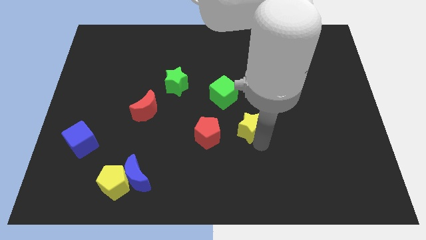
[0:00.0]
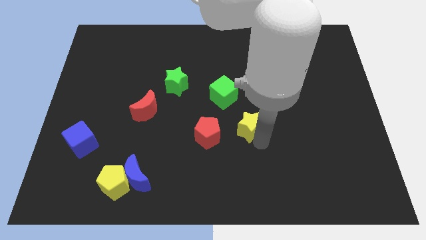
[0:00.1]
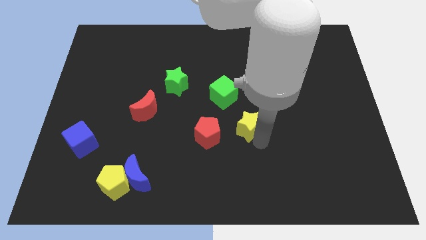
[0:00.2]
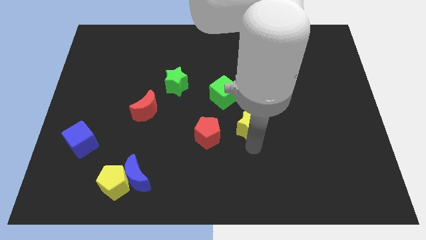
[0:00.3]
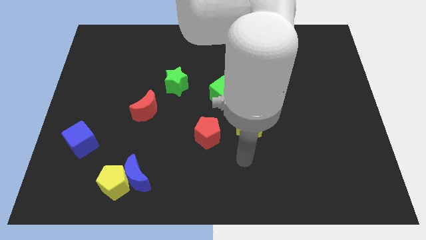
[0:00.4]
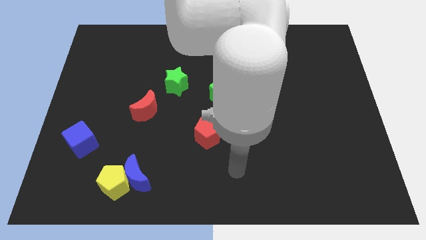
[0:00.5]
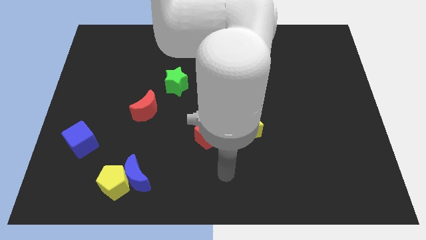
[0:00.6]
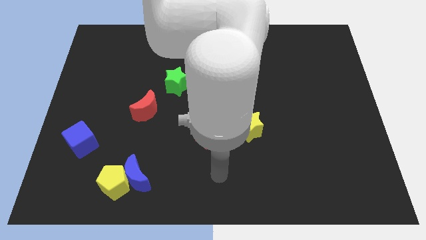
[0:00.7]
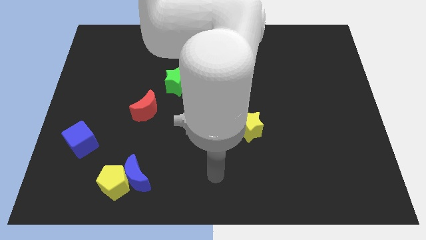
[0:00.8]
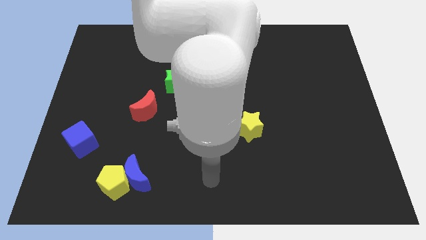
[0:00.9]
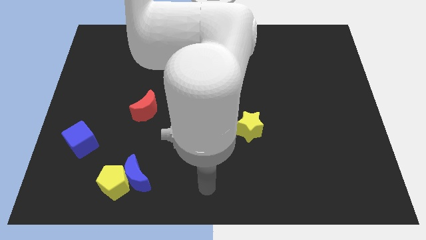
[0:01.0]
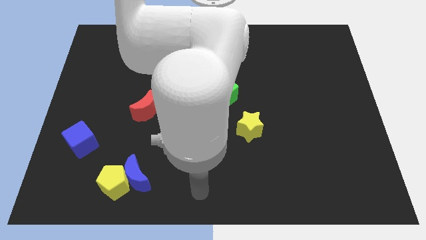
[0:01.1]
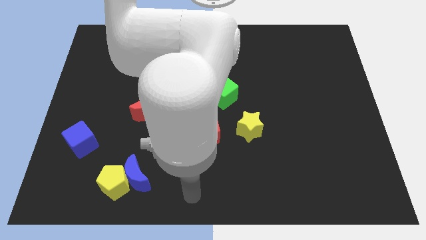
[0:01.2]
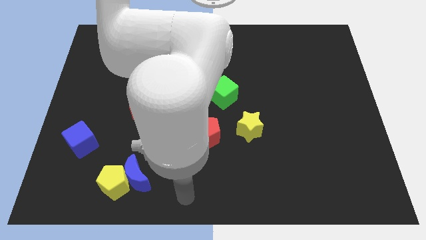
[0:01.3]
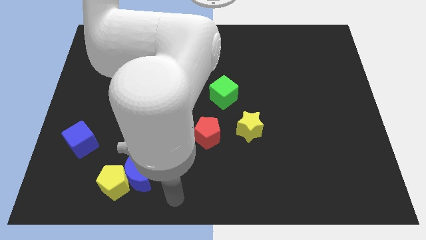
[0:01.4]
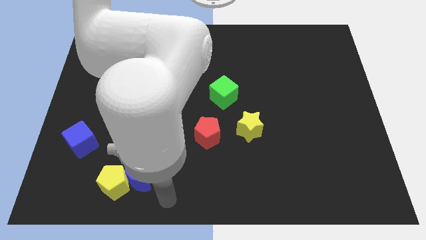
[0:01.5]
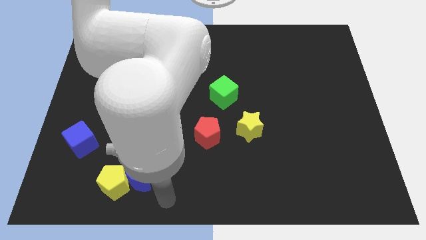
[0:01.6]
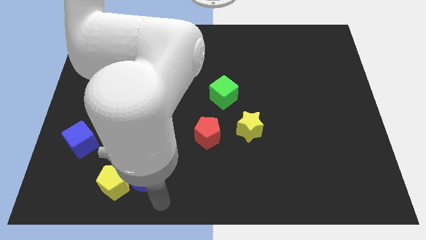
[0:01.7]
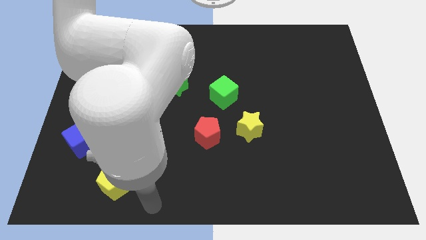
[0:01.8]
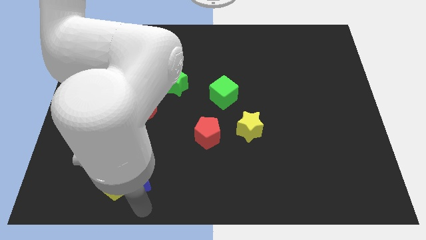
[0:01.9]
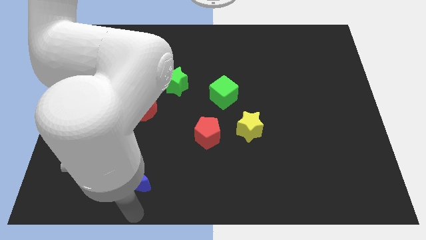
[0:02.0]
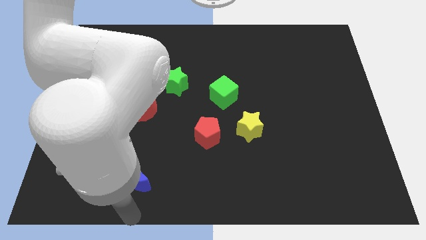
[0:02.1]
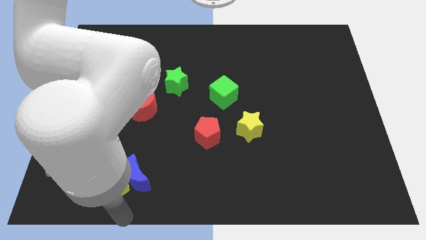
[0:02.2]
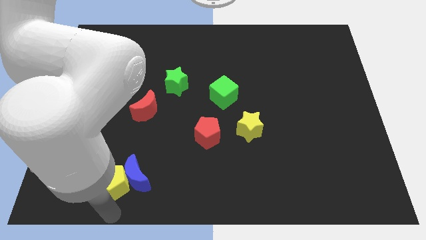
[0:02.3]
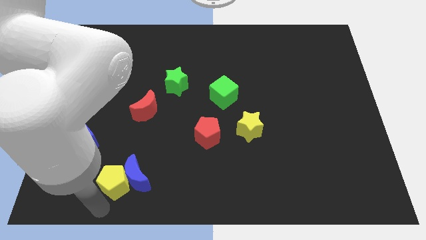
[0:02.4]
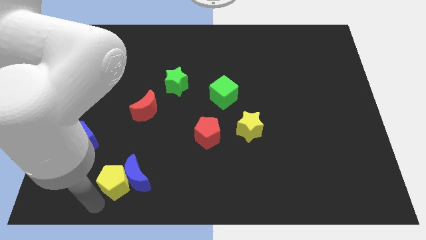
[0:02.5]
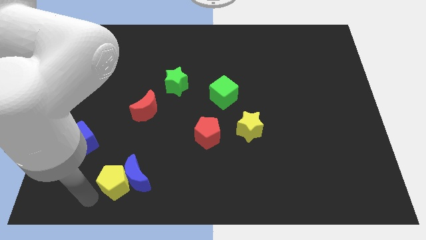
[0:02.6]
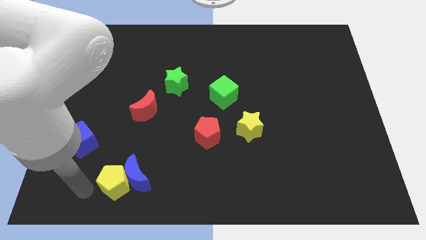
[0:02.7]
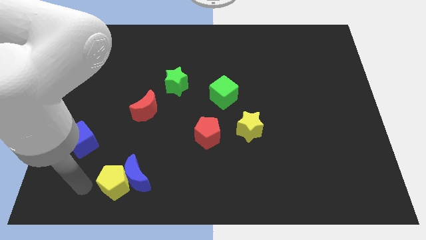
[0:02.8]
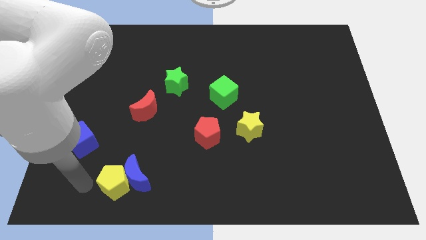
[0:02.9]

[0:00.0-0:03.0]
go and point your arm to the left of the yellow pentagon

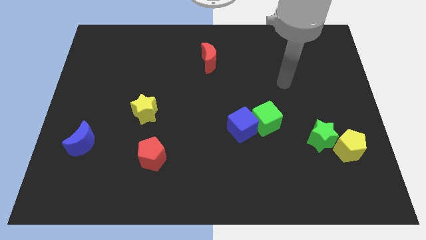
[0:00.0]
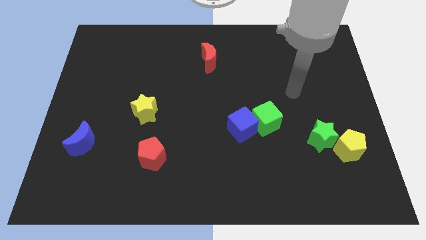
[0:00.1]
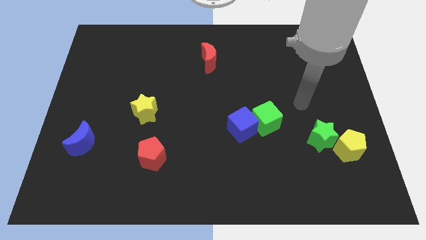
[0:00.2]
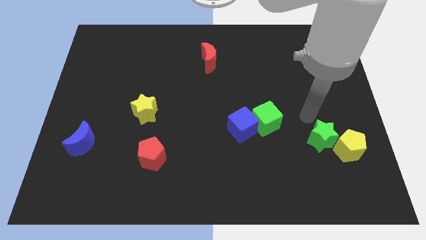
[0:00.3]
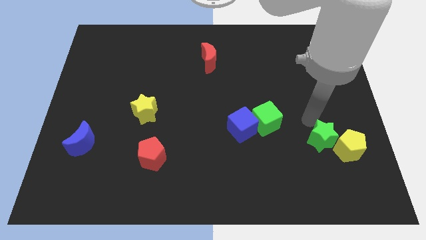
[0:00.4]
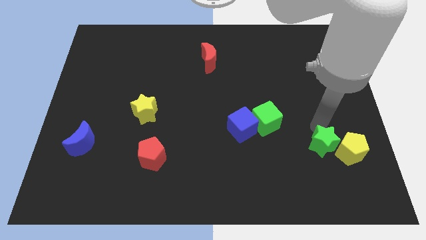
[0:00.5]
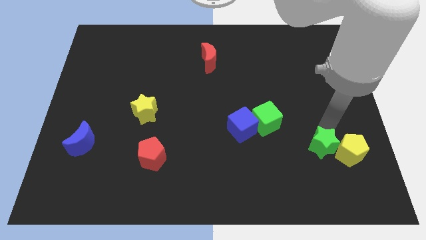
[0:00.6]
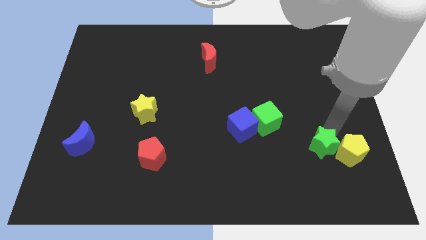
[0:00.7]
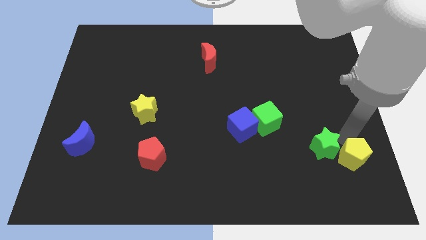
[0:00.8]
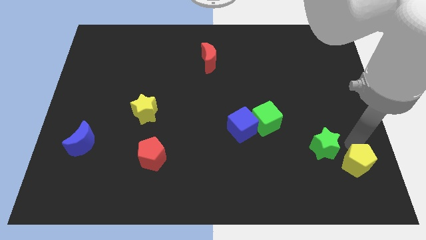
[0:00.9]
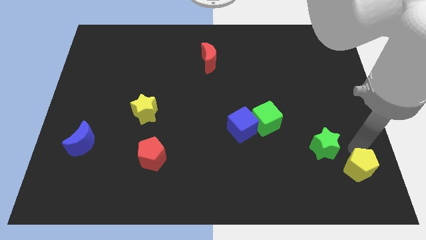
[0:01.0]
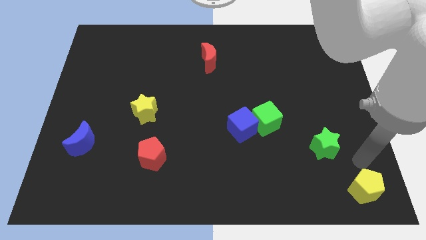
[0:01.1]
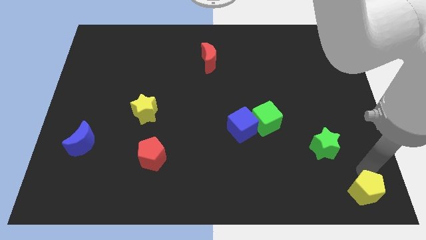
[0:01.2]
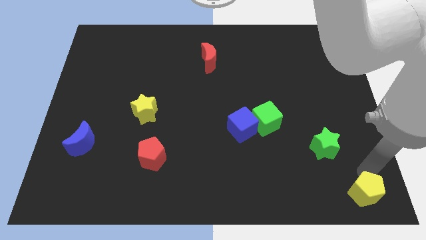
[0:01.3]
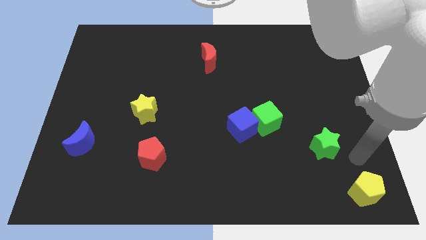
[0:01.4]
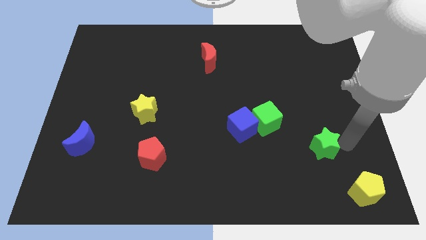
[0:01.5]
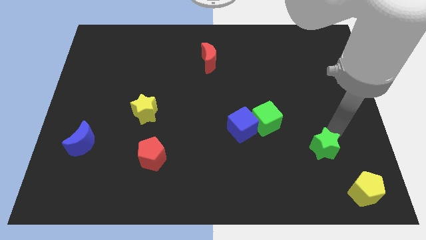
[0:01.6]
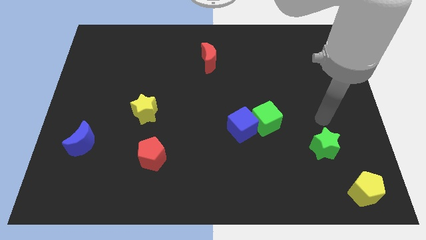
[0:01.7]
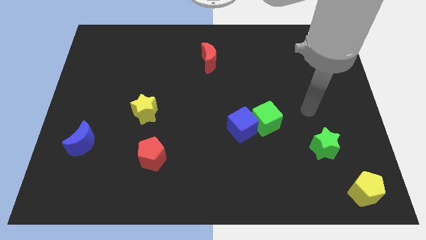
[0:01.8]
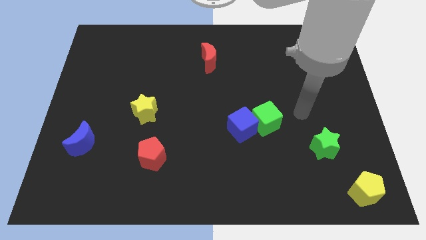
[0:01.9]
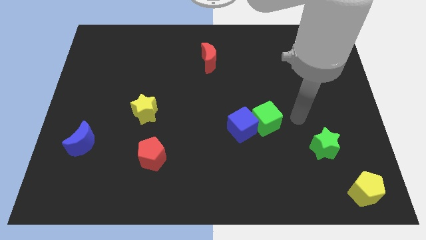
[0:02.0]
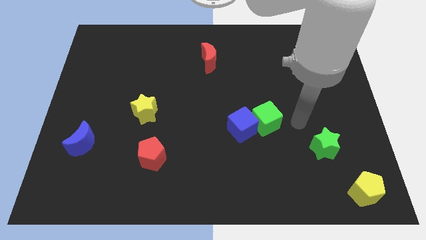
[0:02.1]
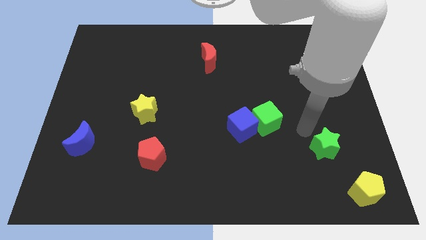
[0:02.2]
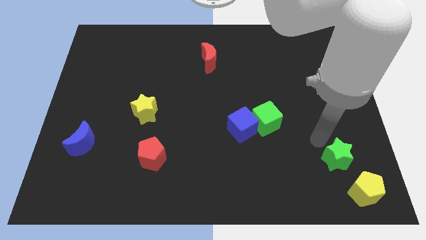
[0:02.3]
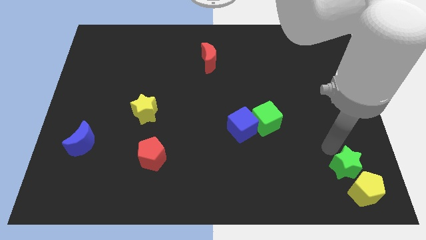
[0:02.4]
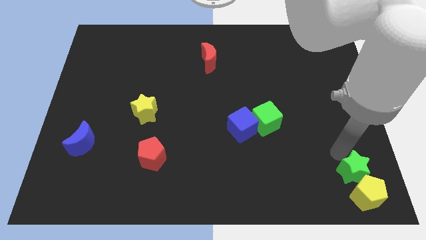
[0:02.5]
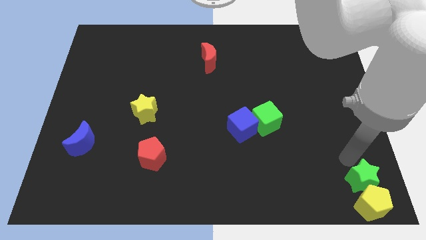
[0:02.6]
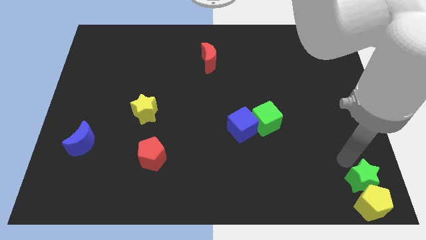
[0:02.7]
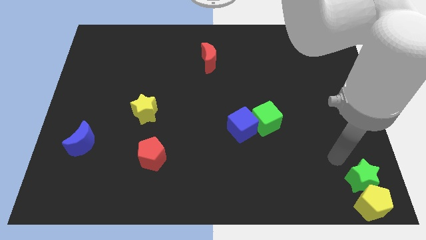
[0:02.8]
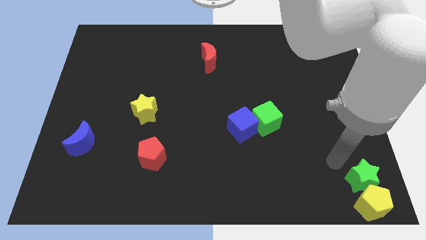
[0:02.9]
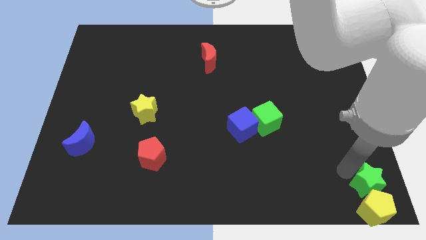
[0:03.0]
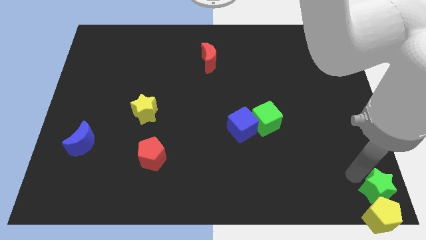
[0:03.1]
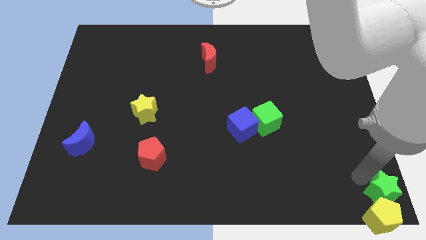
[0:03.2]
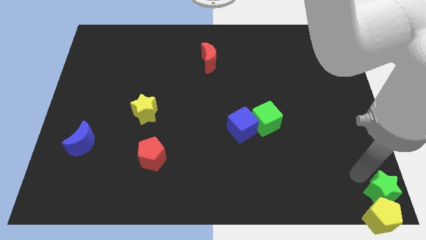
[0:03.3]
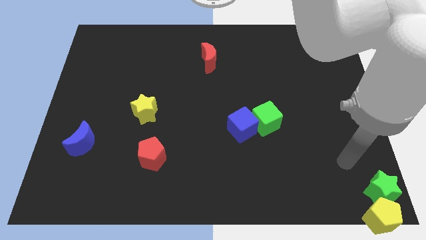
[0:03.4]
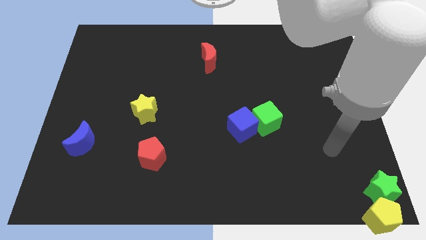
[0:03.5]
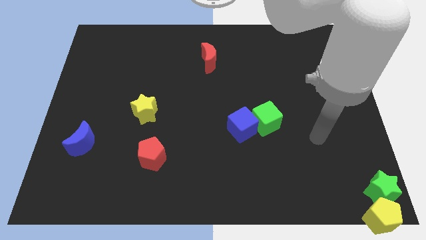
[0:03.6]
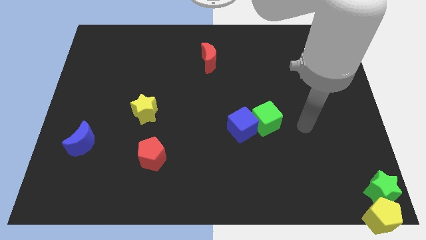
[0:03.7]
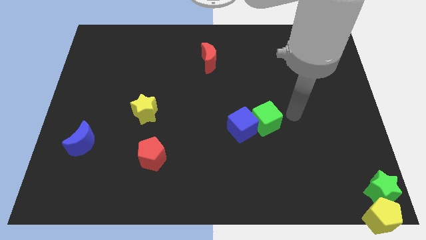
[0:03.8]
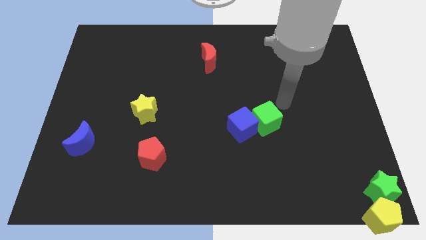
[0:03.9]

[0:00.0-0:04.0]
put the green star and yellow pentagon at the bottom right

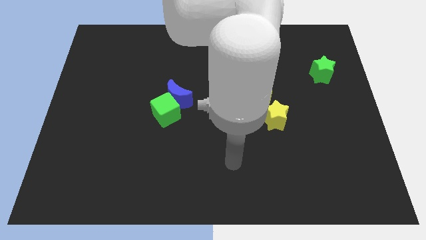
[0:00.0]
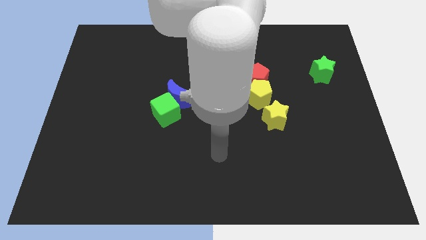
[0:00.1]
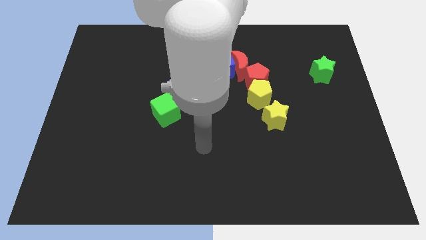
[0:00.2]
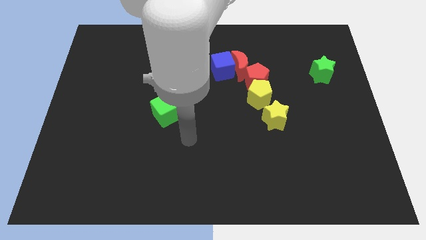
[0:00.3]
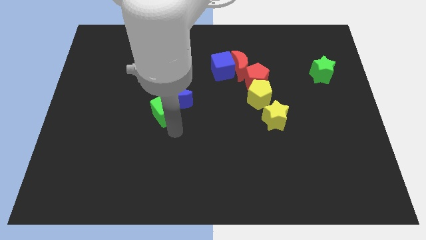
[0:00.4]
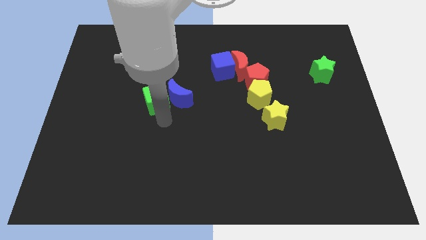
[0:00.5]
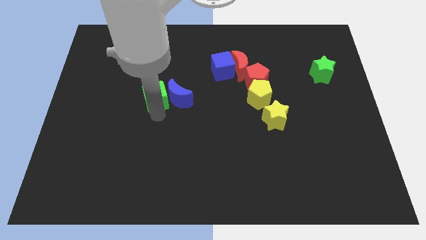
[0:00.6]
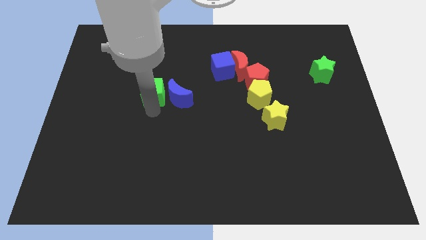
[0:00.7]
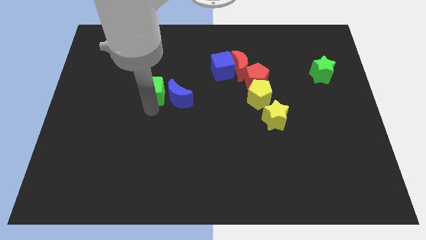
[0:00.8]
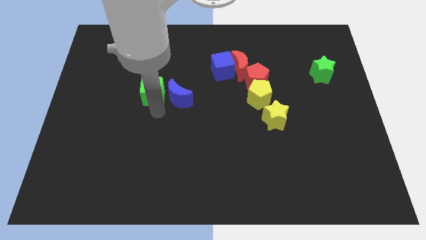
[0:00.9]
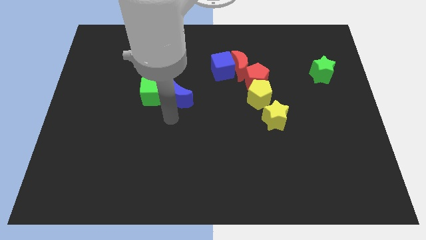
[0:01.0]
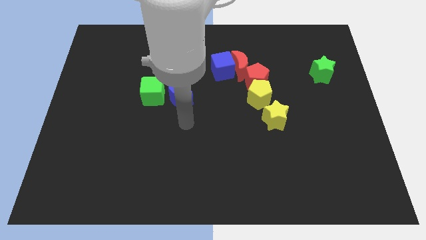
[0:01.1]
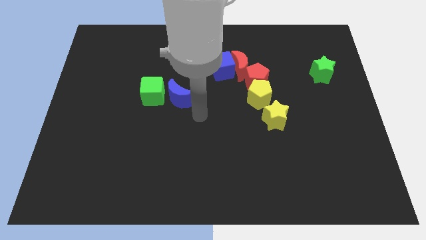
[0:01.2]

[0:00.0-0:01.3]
push the green cube to the left of the blue moon

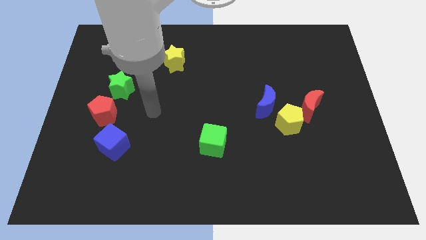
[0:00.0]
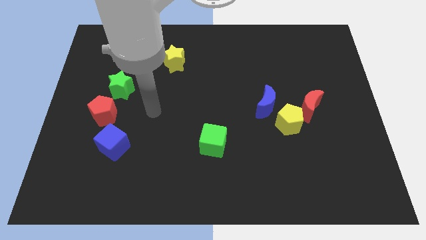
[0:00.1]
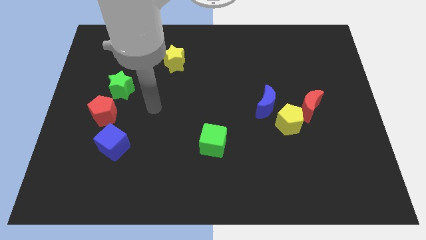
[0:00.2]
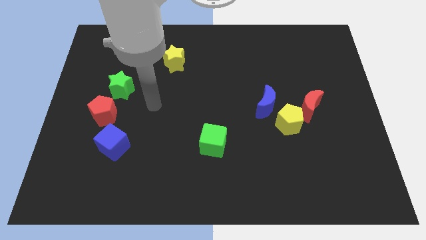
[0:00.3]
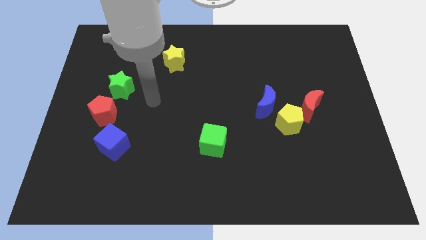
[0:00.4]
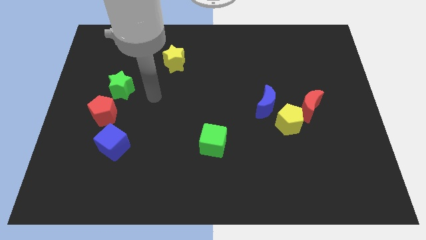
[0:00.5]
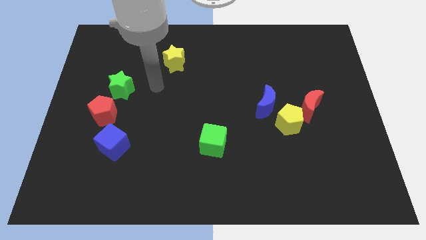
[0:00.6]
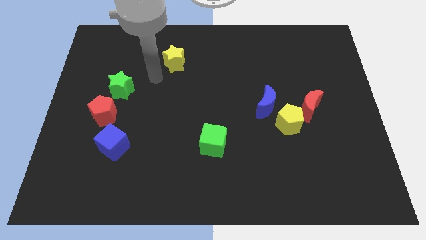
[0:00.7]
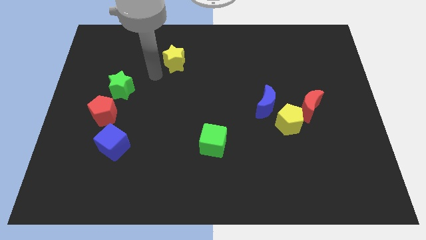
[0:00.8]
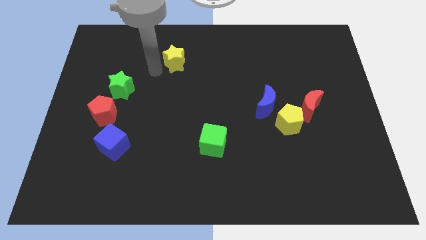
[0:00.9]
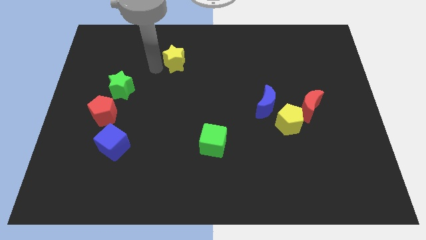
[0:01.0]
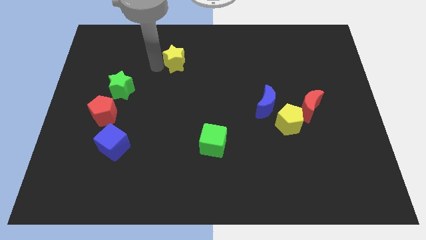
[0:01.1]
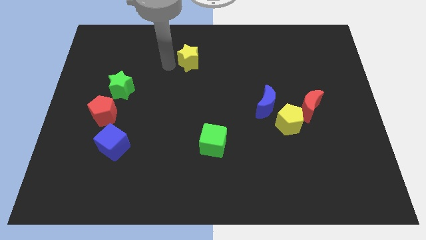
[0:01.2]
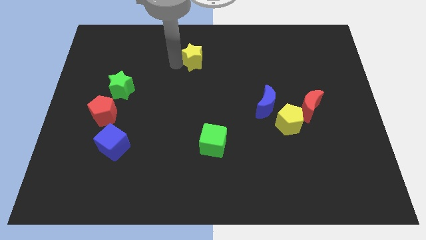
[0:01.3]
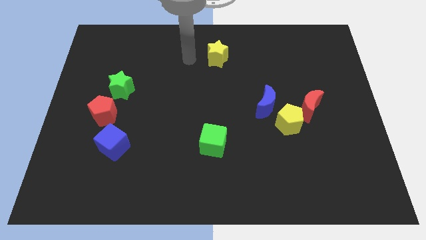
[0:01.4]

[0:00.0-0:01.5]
move the yellow star slightly to the right
